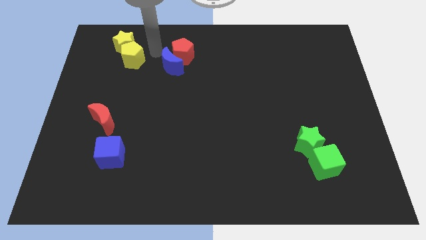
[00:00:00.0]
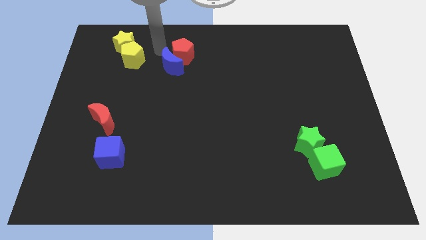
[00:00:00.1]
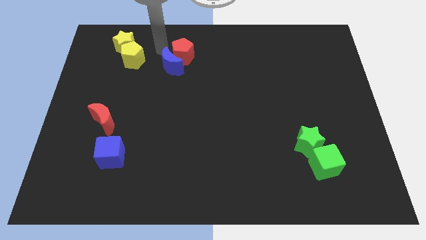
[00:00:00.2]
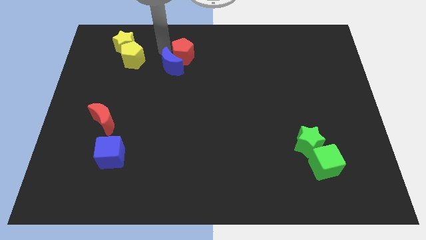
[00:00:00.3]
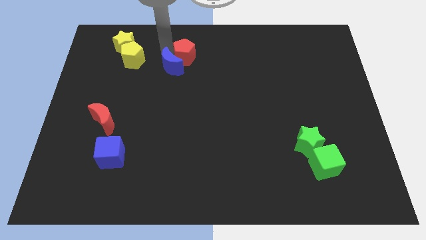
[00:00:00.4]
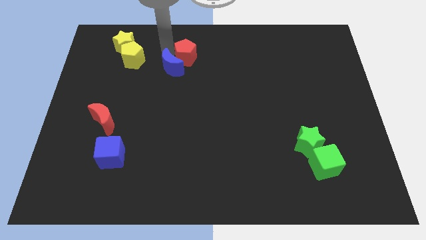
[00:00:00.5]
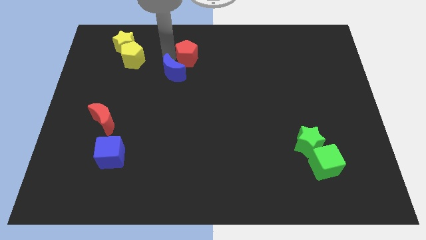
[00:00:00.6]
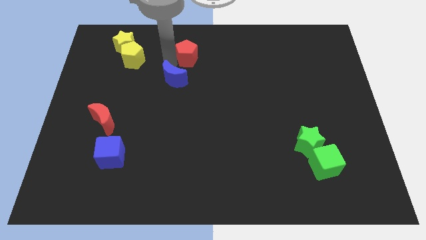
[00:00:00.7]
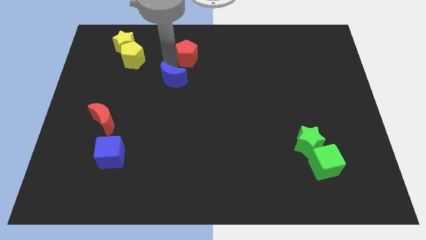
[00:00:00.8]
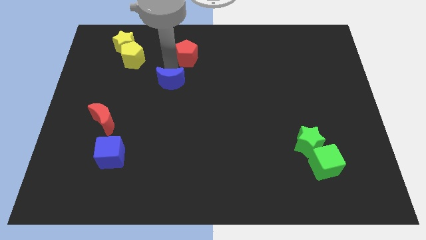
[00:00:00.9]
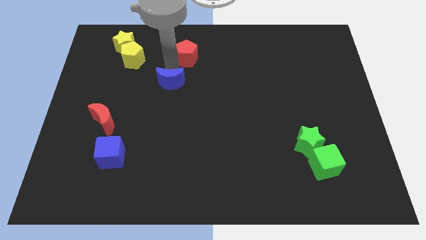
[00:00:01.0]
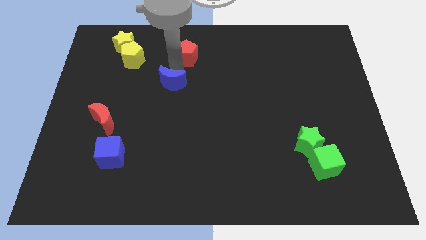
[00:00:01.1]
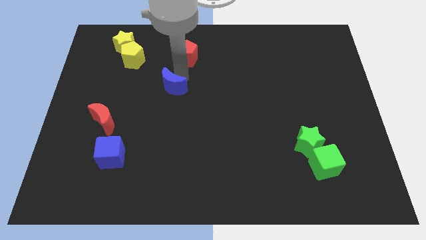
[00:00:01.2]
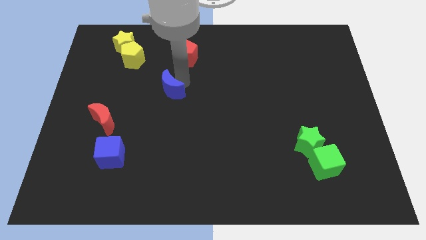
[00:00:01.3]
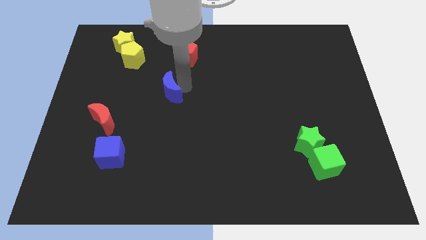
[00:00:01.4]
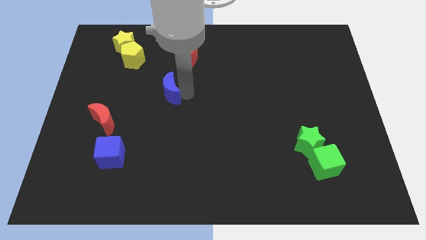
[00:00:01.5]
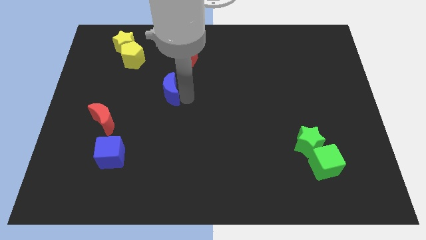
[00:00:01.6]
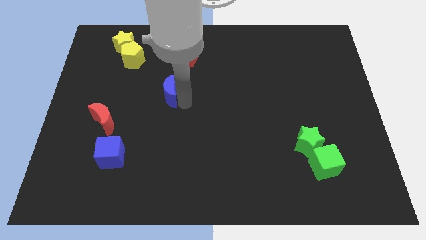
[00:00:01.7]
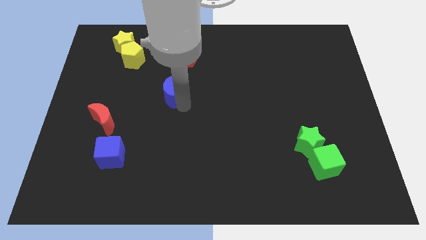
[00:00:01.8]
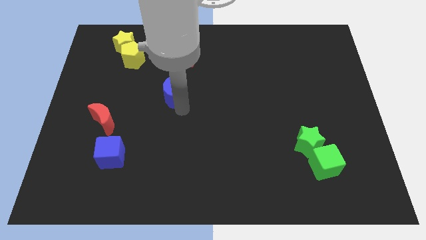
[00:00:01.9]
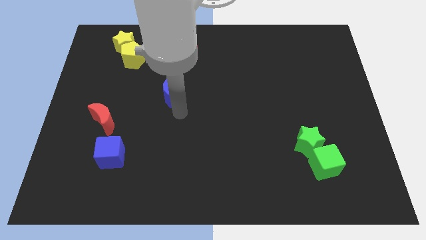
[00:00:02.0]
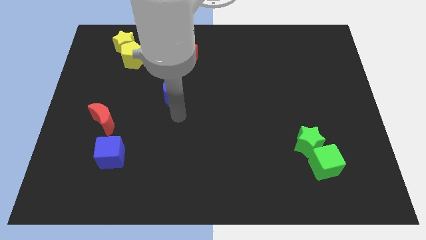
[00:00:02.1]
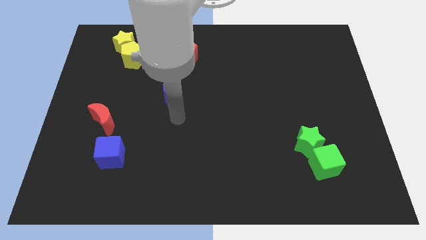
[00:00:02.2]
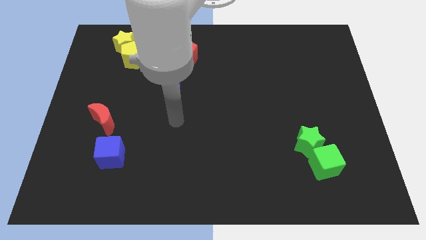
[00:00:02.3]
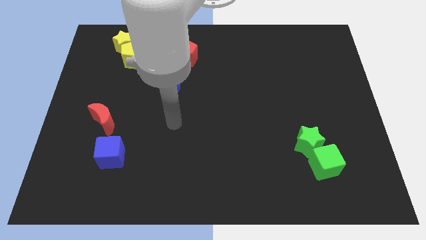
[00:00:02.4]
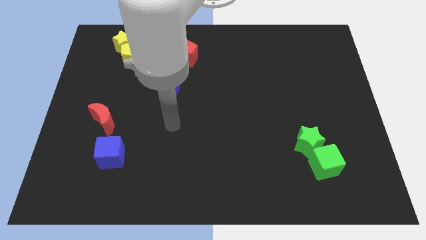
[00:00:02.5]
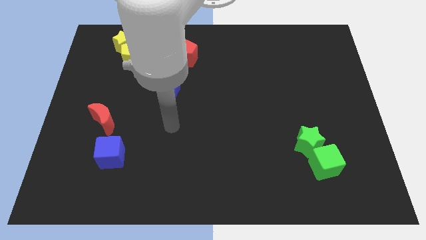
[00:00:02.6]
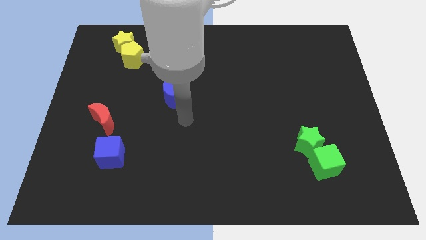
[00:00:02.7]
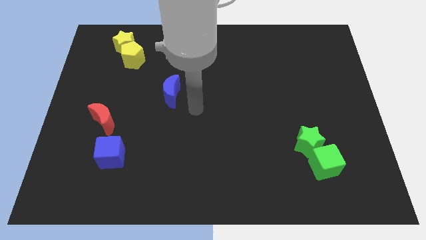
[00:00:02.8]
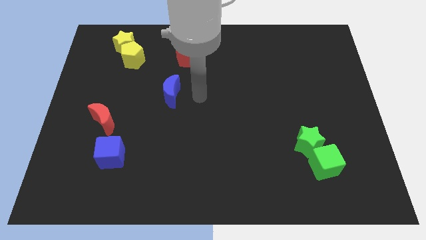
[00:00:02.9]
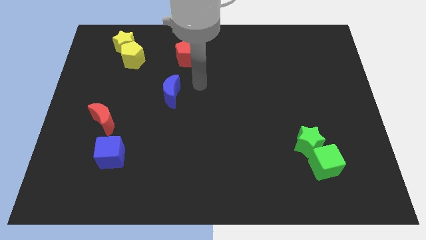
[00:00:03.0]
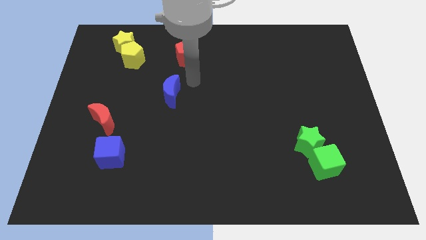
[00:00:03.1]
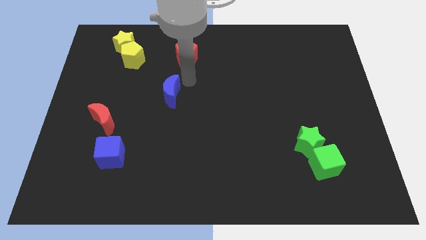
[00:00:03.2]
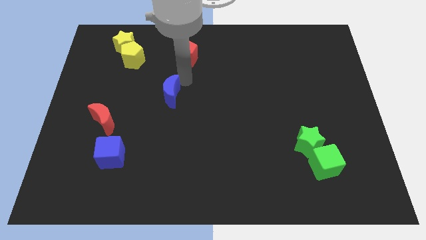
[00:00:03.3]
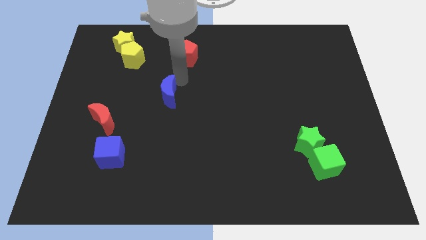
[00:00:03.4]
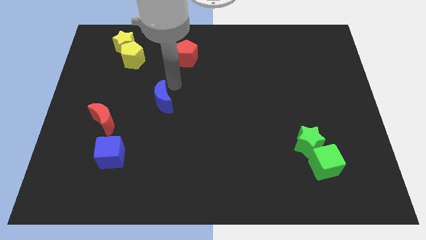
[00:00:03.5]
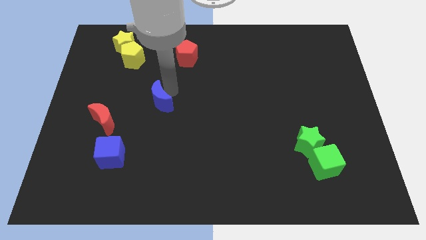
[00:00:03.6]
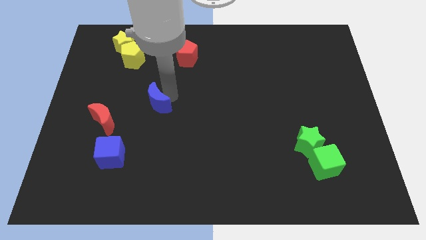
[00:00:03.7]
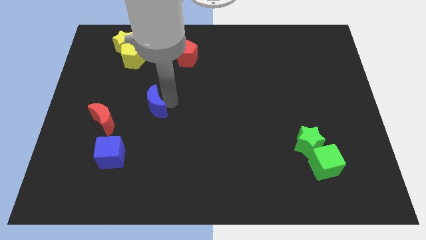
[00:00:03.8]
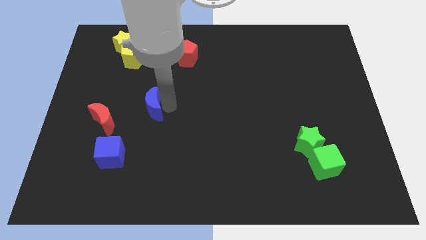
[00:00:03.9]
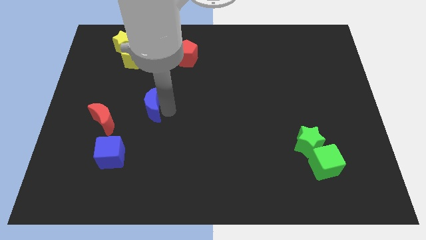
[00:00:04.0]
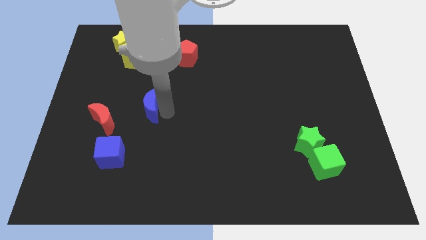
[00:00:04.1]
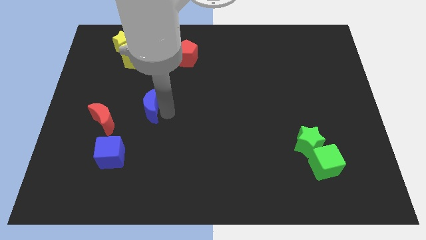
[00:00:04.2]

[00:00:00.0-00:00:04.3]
push the blue moon to the horizontal right side of the red moon

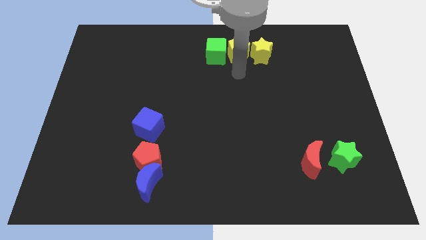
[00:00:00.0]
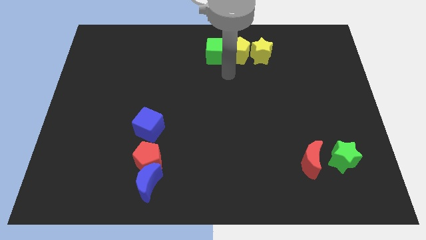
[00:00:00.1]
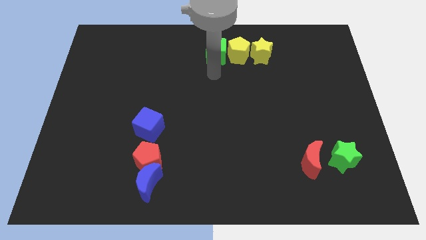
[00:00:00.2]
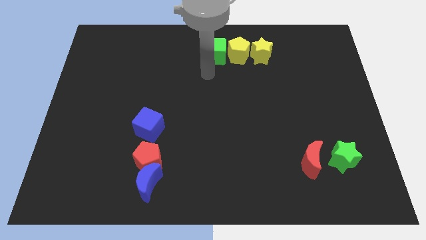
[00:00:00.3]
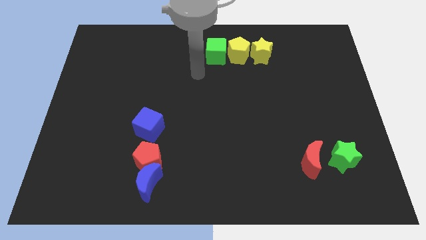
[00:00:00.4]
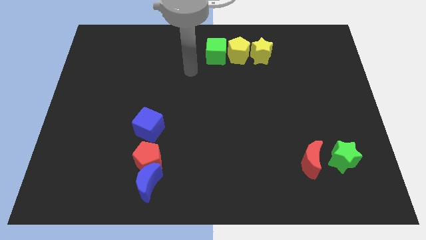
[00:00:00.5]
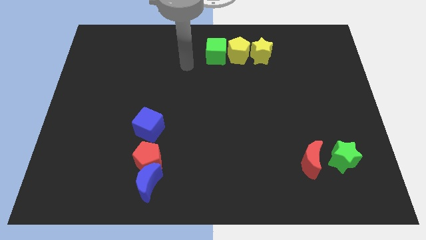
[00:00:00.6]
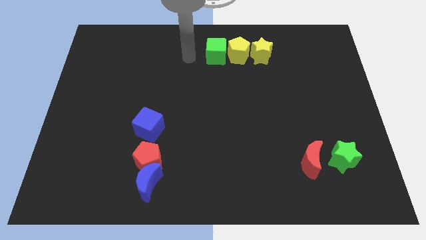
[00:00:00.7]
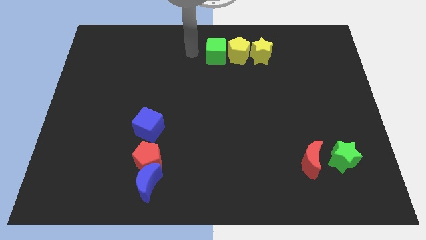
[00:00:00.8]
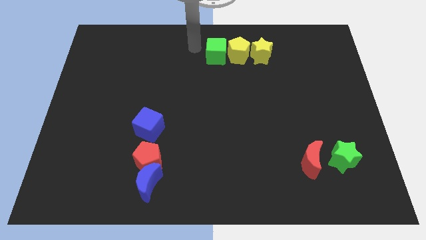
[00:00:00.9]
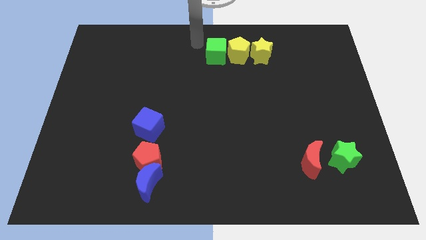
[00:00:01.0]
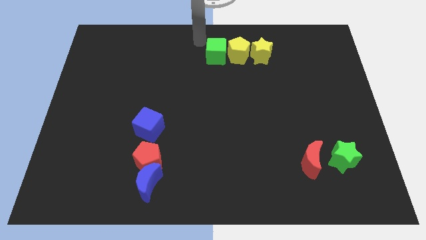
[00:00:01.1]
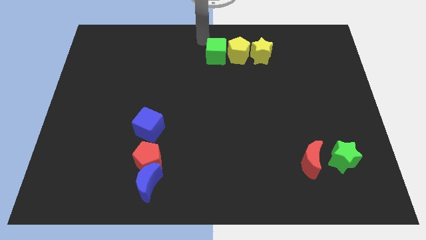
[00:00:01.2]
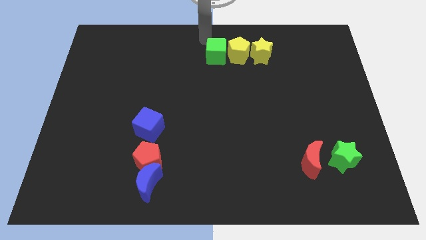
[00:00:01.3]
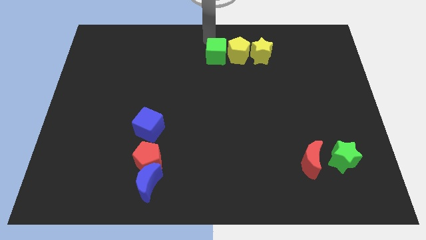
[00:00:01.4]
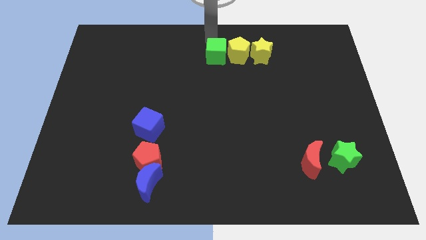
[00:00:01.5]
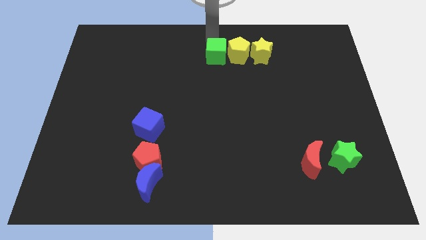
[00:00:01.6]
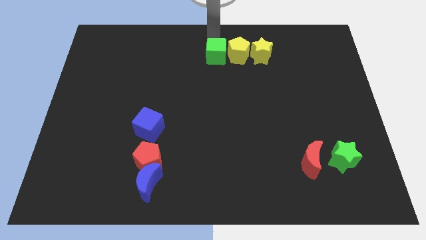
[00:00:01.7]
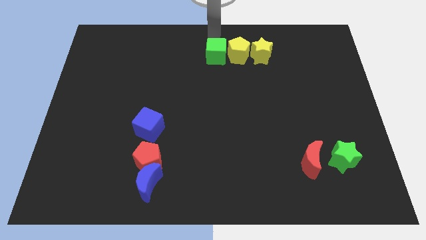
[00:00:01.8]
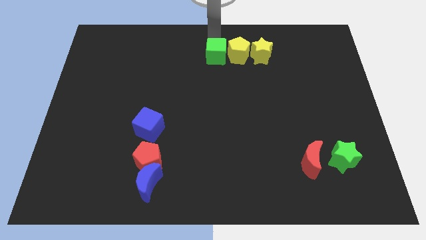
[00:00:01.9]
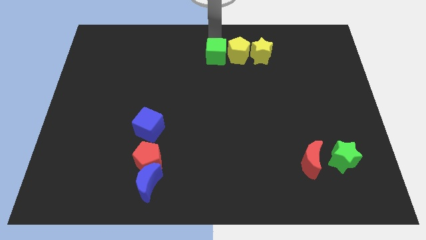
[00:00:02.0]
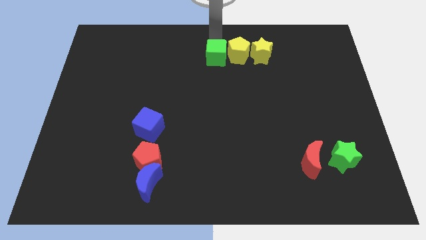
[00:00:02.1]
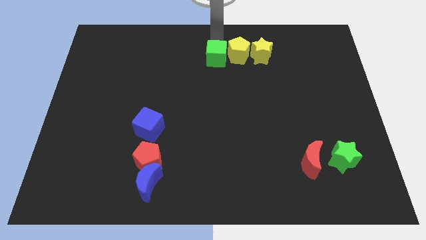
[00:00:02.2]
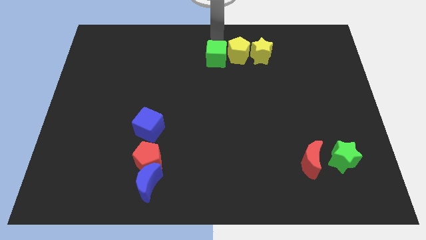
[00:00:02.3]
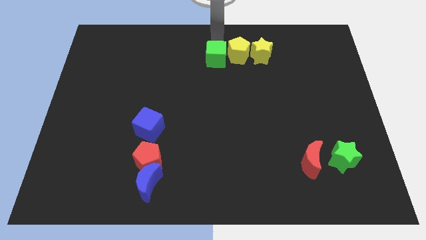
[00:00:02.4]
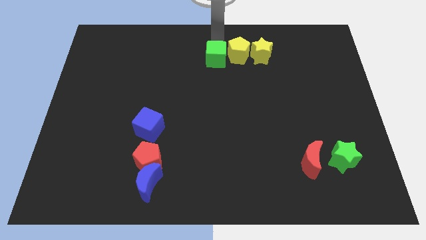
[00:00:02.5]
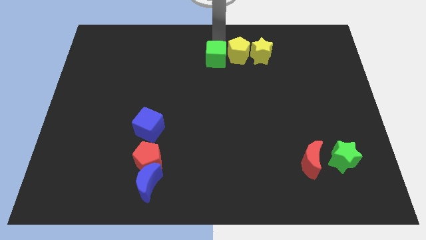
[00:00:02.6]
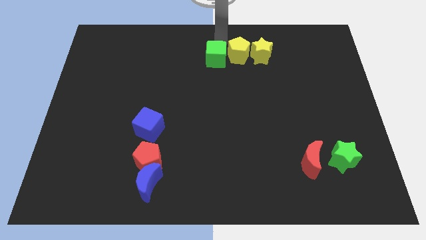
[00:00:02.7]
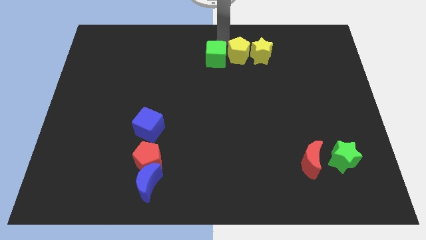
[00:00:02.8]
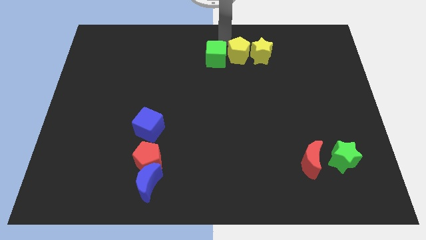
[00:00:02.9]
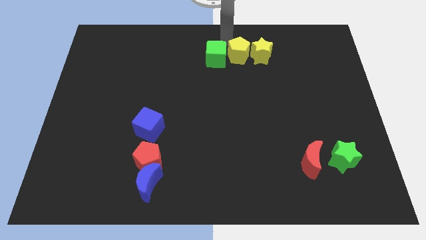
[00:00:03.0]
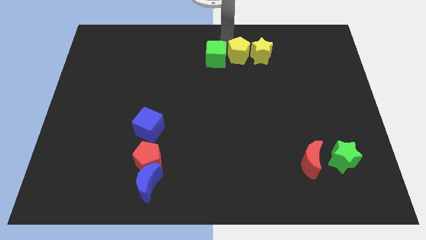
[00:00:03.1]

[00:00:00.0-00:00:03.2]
move green cube slightly down

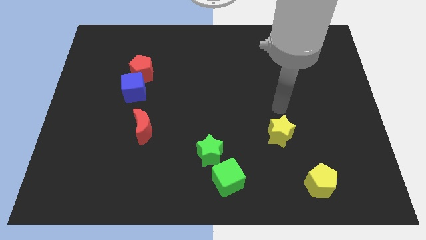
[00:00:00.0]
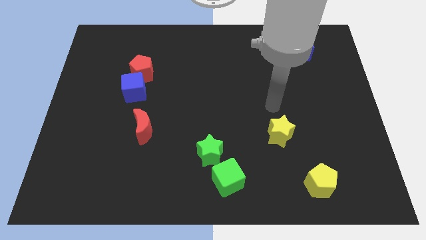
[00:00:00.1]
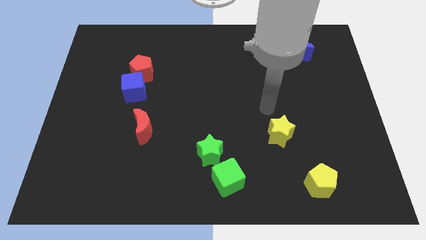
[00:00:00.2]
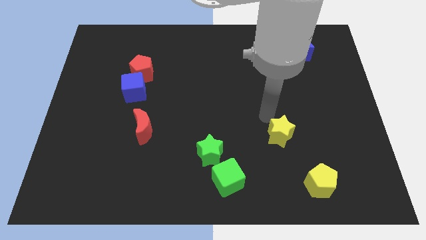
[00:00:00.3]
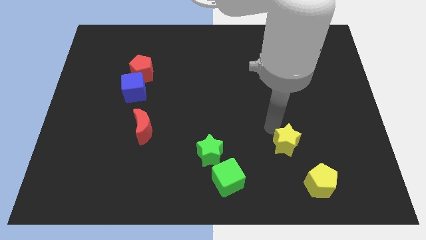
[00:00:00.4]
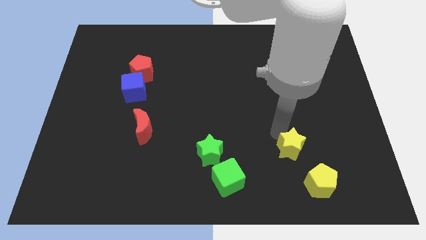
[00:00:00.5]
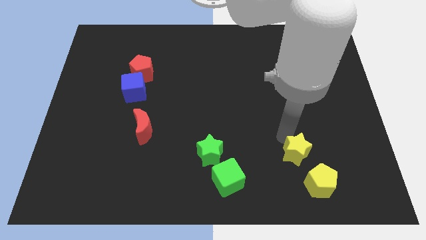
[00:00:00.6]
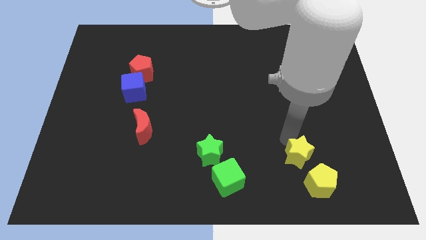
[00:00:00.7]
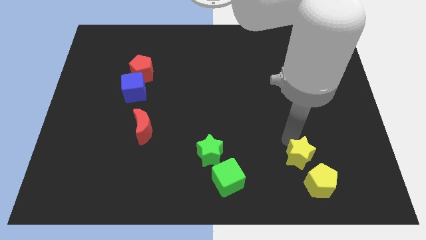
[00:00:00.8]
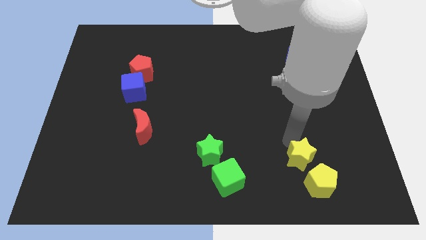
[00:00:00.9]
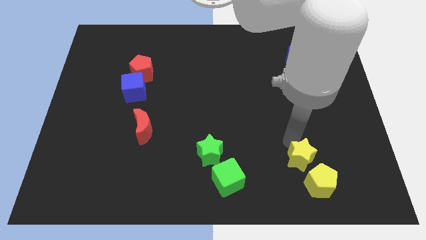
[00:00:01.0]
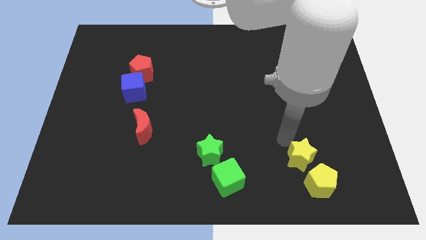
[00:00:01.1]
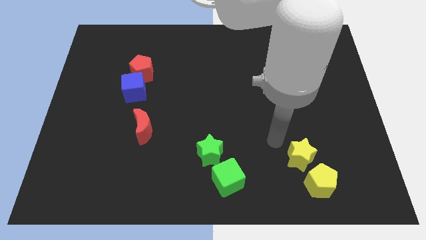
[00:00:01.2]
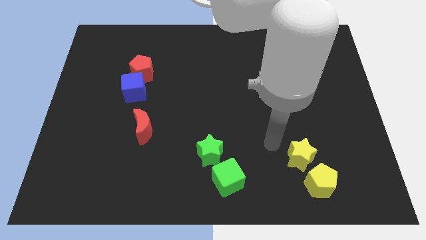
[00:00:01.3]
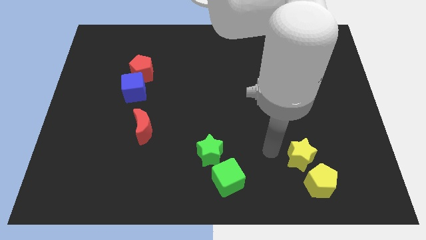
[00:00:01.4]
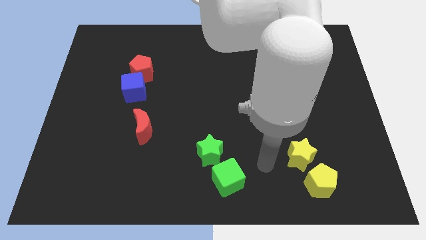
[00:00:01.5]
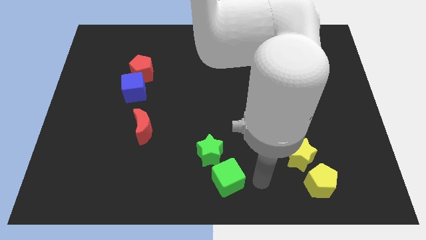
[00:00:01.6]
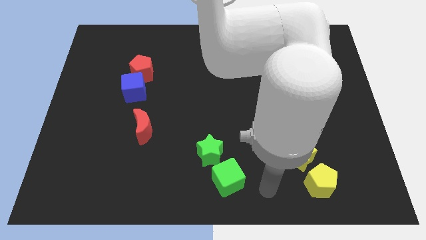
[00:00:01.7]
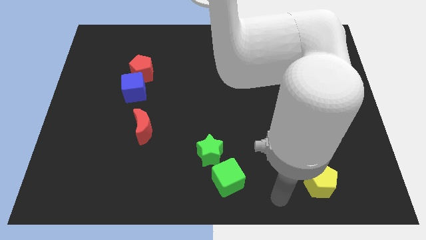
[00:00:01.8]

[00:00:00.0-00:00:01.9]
push the yellow star to the top left of the yellow pentagon
